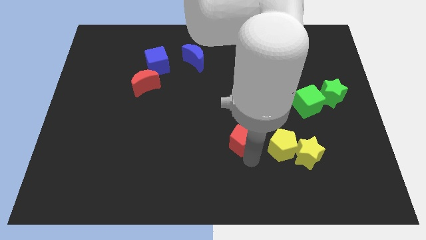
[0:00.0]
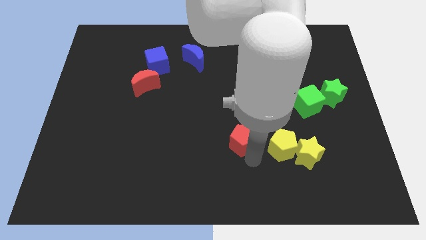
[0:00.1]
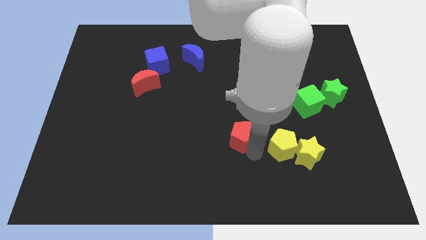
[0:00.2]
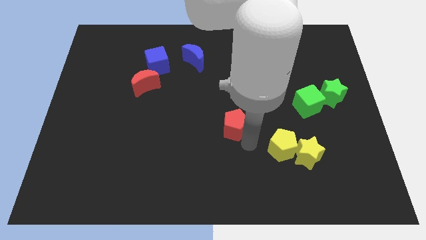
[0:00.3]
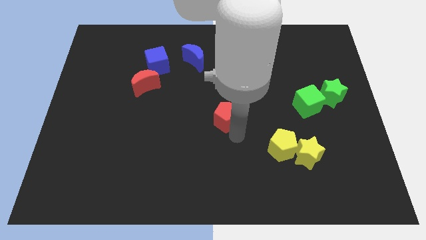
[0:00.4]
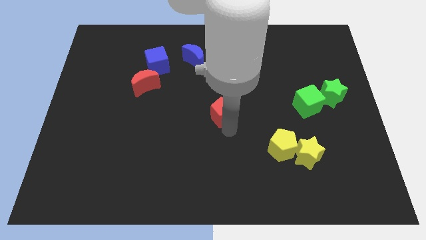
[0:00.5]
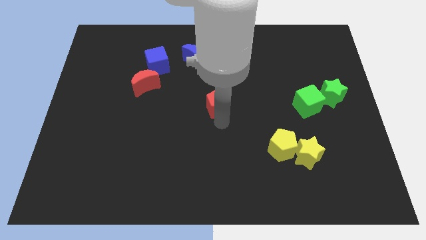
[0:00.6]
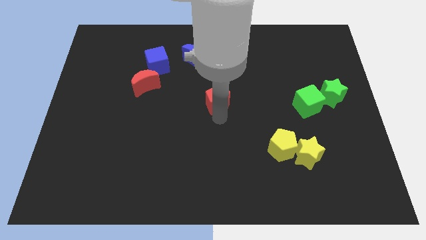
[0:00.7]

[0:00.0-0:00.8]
push red pentagon slightly towards upwards

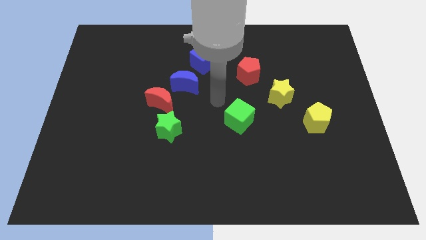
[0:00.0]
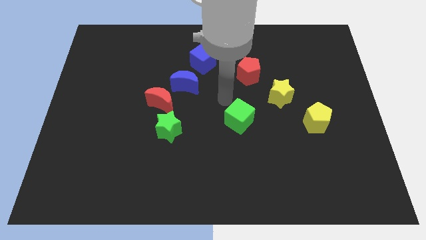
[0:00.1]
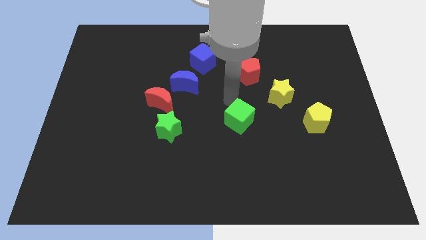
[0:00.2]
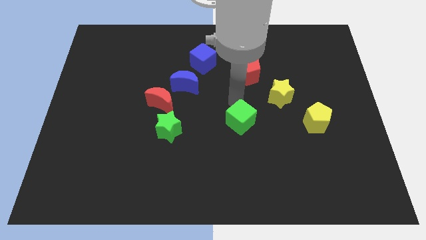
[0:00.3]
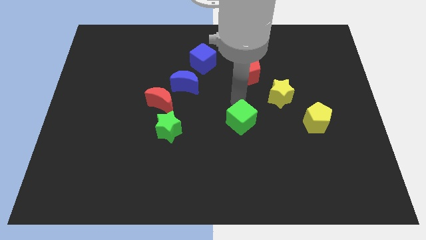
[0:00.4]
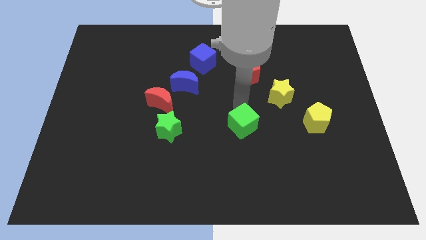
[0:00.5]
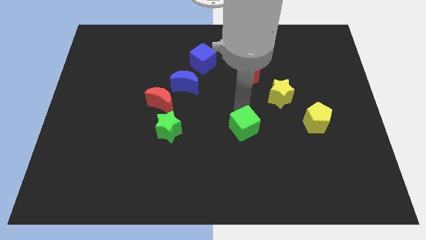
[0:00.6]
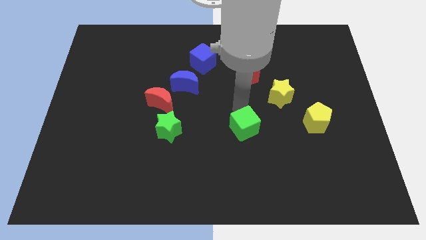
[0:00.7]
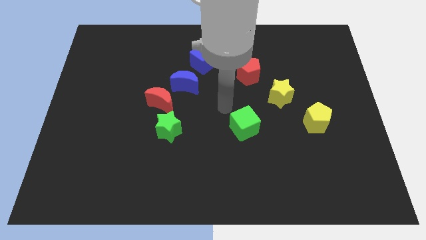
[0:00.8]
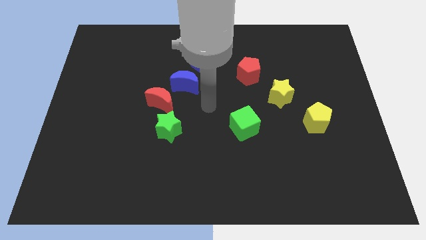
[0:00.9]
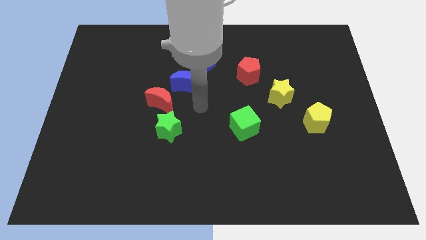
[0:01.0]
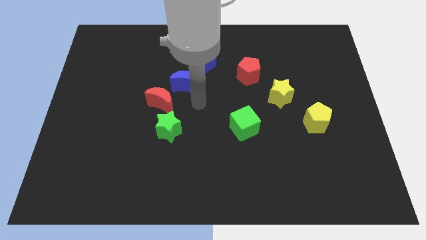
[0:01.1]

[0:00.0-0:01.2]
place the green cube horizontal right to the green star

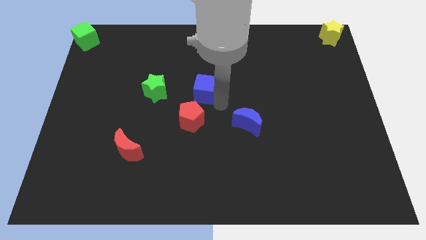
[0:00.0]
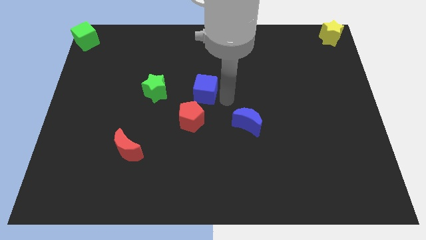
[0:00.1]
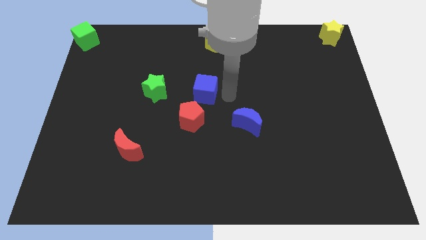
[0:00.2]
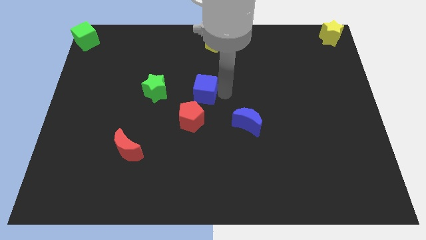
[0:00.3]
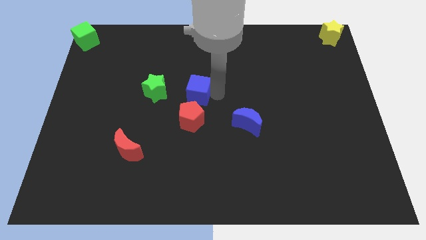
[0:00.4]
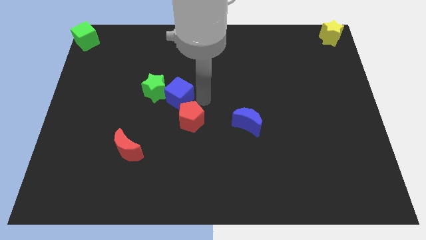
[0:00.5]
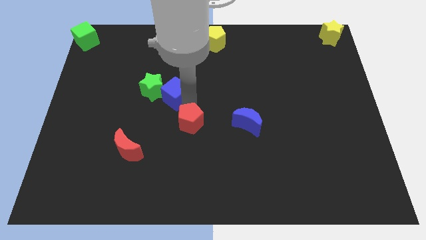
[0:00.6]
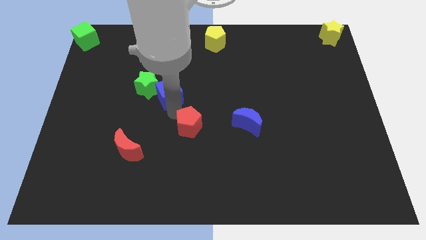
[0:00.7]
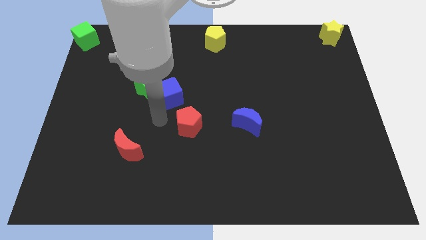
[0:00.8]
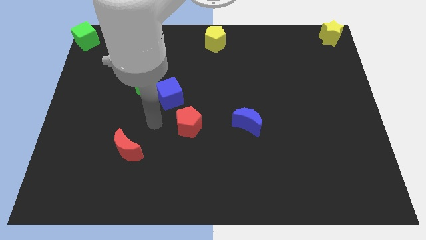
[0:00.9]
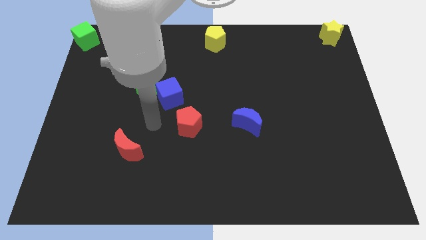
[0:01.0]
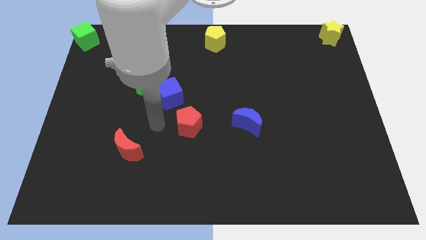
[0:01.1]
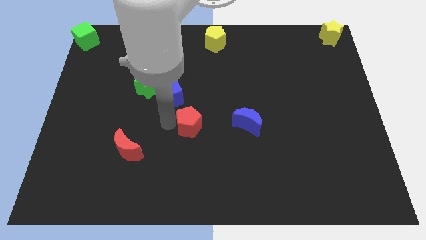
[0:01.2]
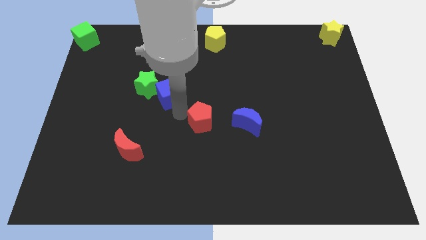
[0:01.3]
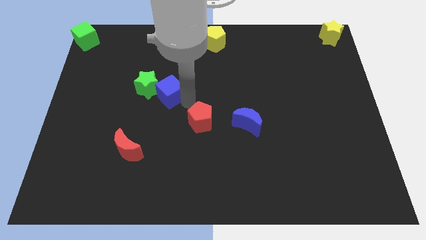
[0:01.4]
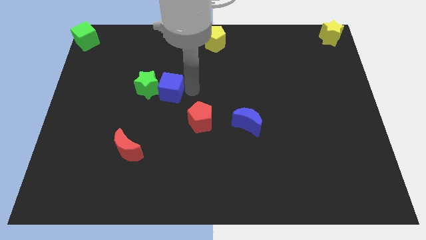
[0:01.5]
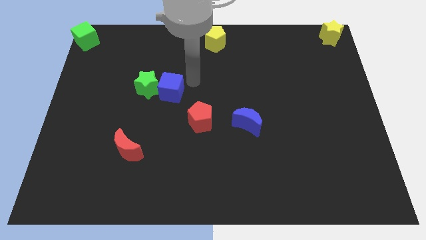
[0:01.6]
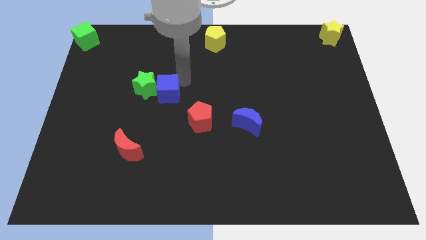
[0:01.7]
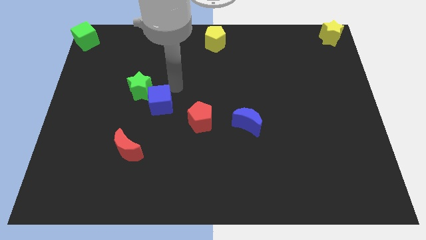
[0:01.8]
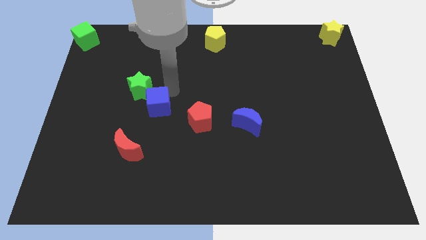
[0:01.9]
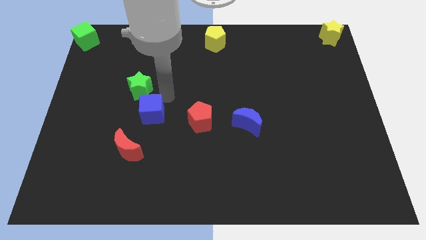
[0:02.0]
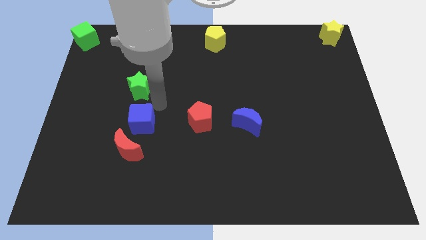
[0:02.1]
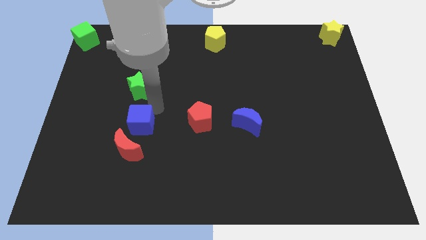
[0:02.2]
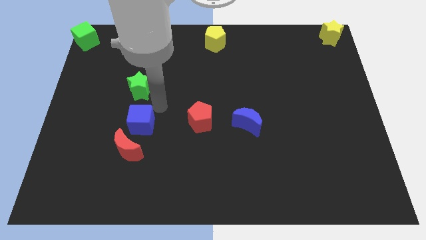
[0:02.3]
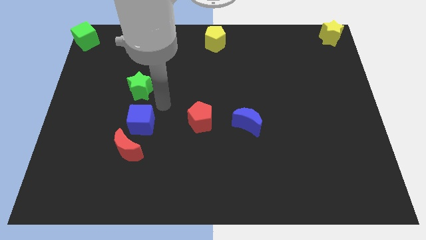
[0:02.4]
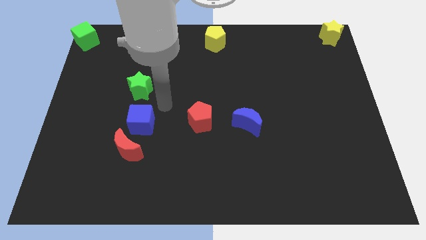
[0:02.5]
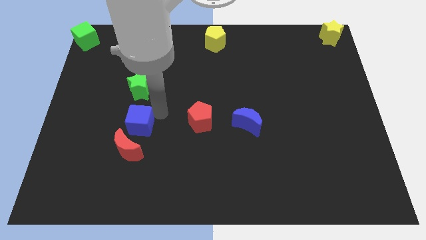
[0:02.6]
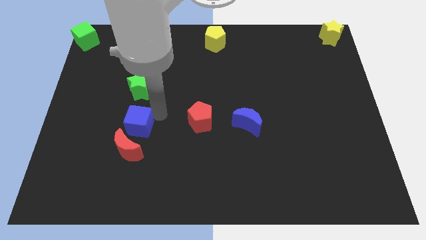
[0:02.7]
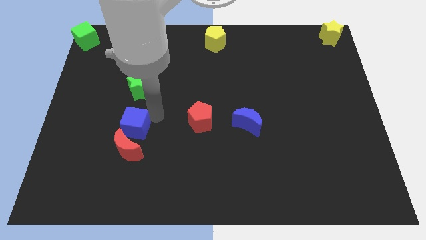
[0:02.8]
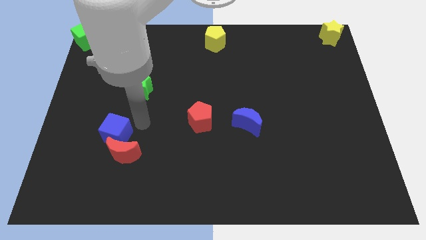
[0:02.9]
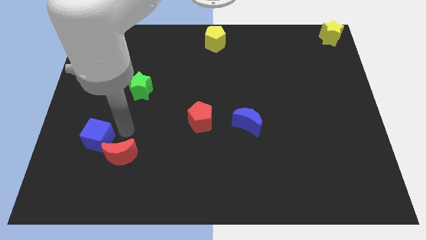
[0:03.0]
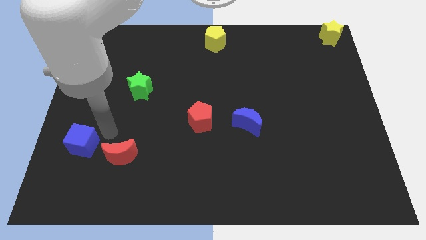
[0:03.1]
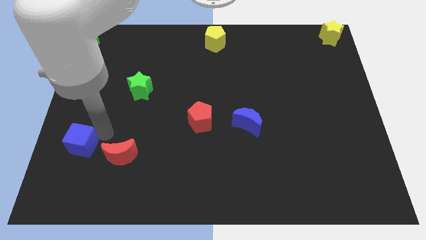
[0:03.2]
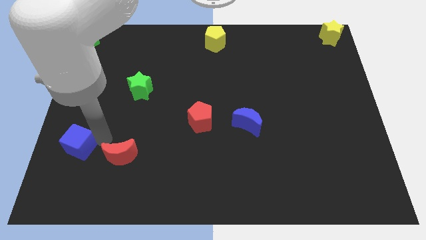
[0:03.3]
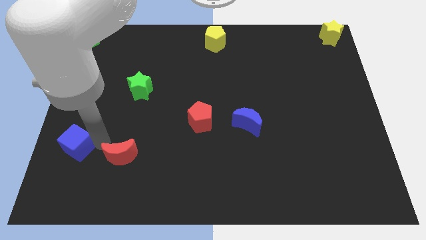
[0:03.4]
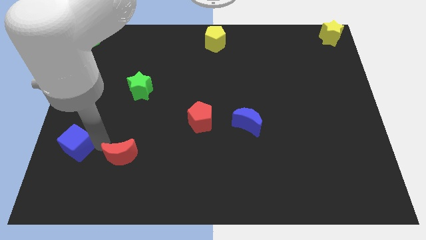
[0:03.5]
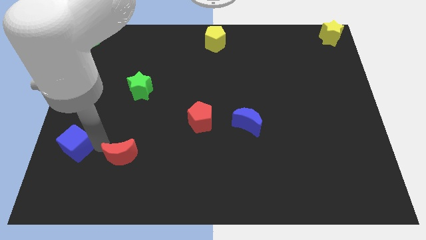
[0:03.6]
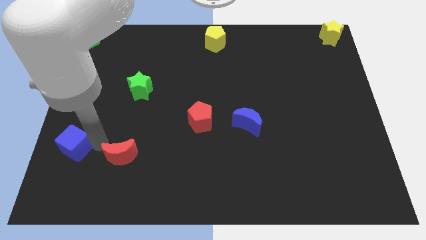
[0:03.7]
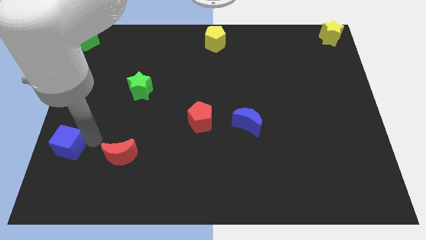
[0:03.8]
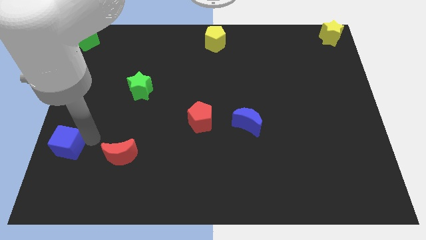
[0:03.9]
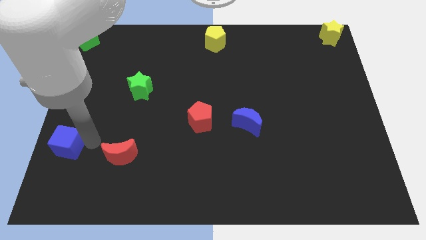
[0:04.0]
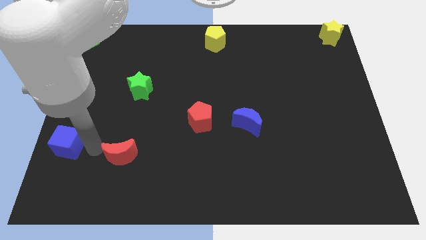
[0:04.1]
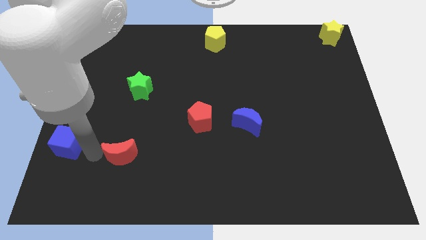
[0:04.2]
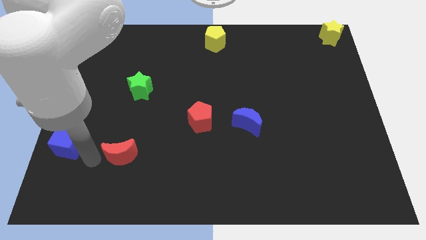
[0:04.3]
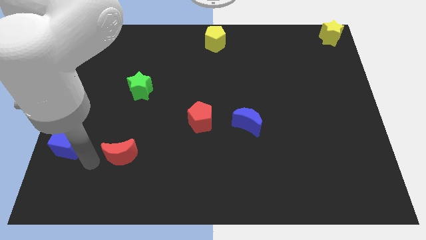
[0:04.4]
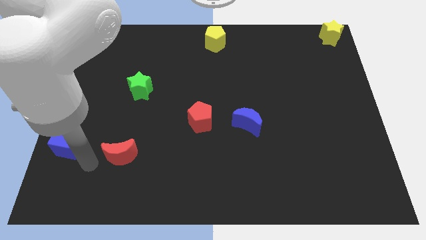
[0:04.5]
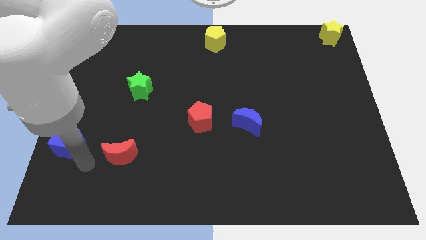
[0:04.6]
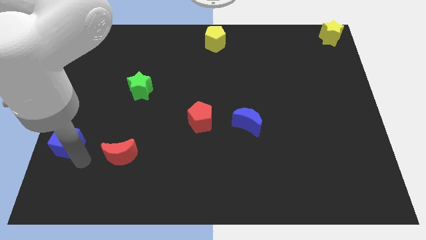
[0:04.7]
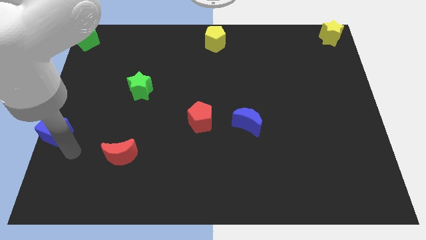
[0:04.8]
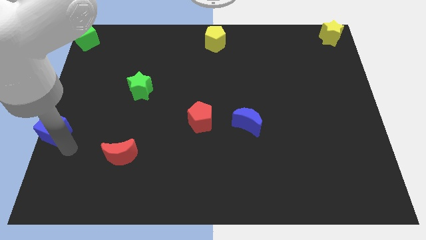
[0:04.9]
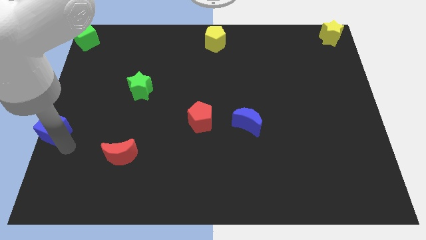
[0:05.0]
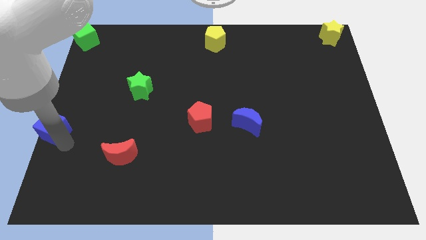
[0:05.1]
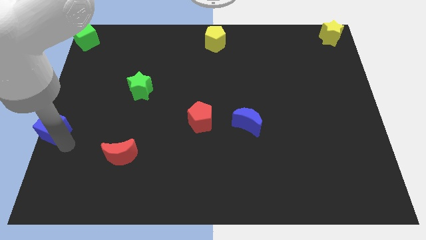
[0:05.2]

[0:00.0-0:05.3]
push the blue cube to the left side of the board

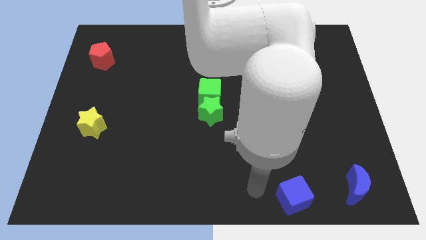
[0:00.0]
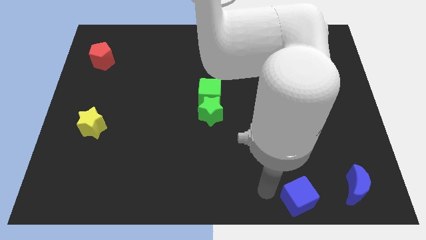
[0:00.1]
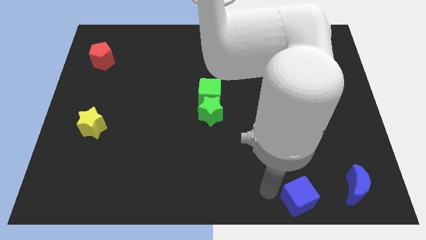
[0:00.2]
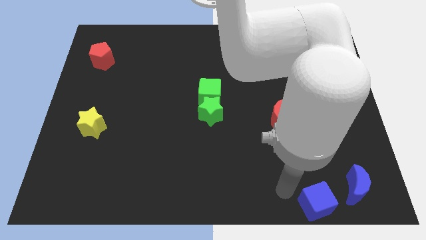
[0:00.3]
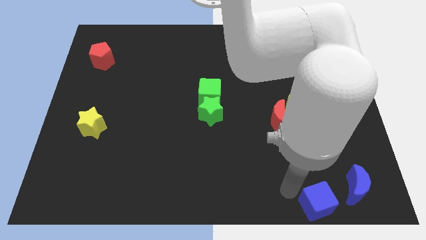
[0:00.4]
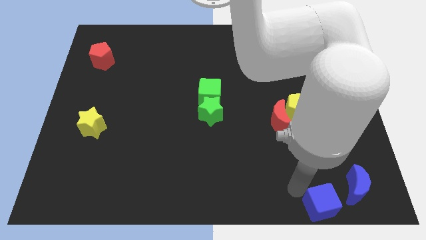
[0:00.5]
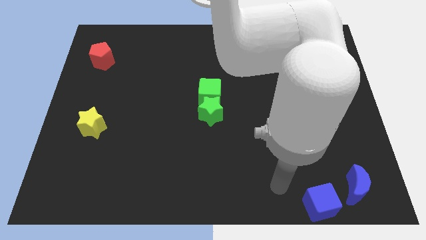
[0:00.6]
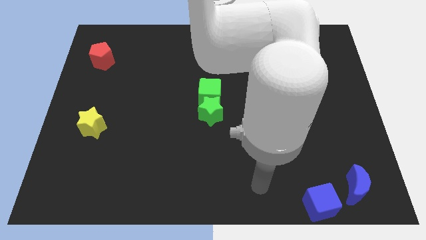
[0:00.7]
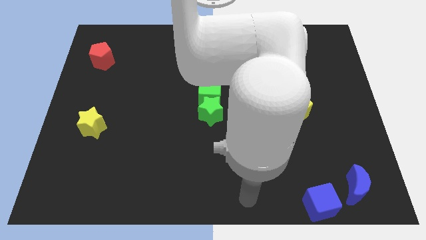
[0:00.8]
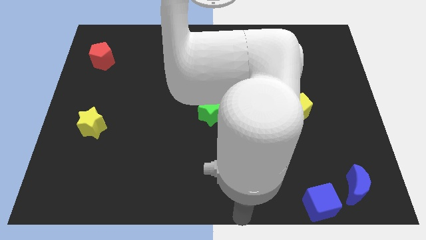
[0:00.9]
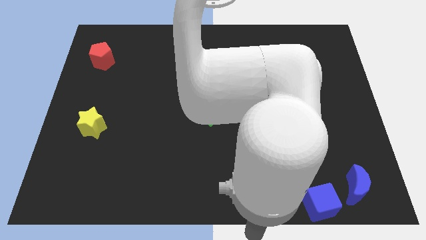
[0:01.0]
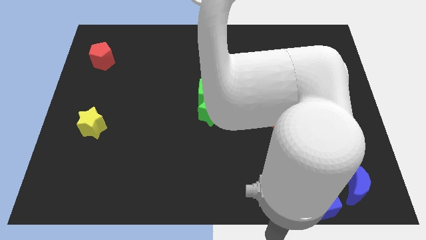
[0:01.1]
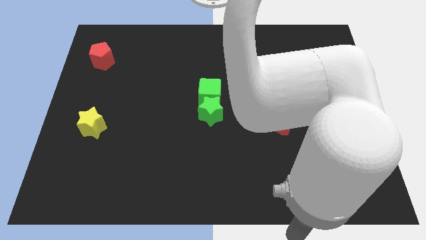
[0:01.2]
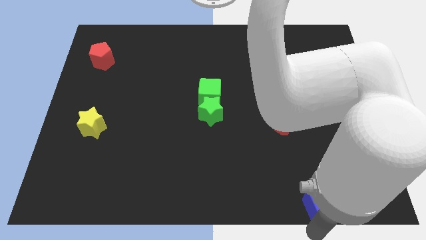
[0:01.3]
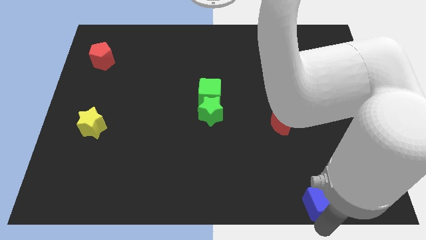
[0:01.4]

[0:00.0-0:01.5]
push the blue cube close to the left of the blue crescent

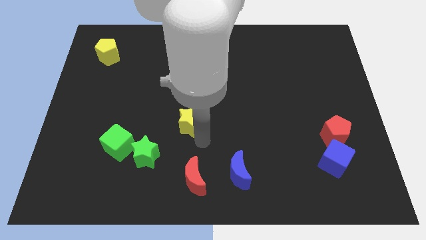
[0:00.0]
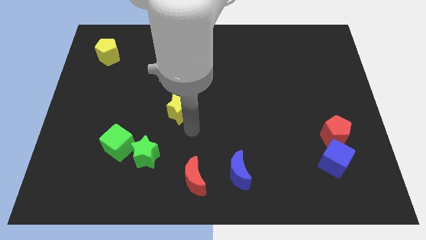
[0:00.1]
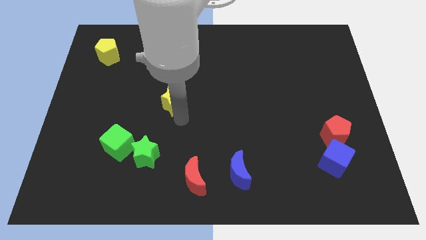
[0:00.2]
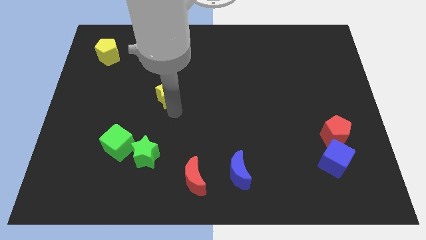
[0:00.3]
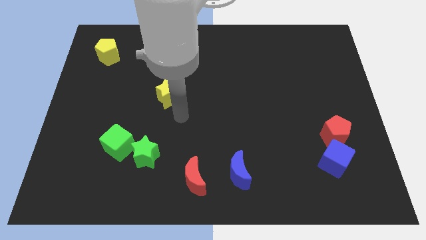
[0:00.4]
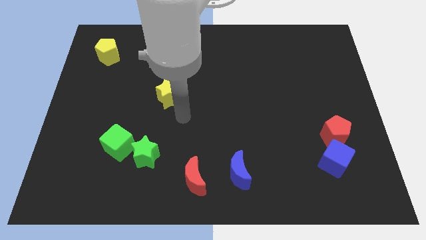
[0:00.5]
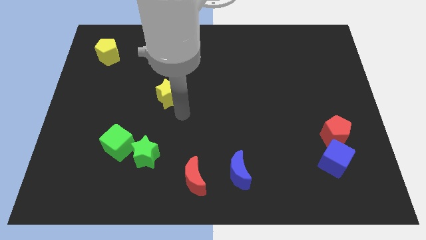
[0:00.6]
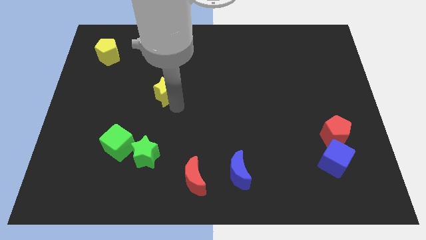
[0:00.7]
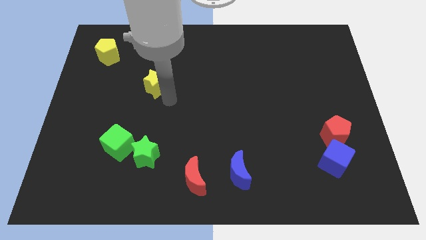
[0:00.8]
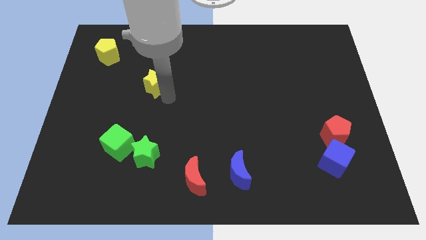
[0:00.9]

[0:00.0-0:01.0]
push the yellow star to the top of the green star
